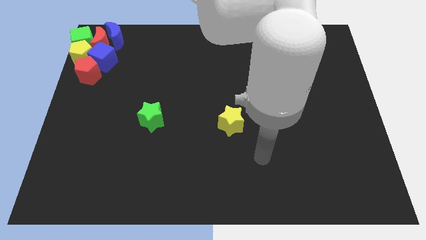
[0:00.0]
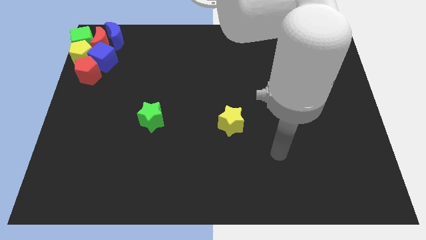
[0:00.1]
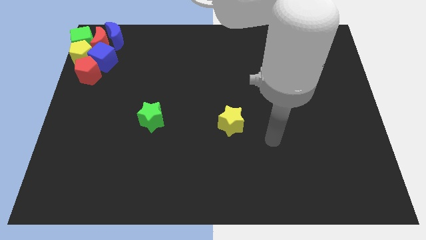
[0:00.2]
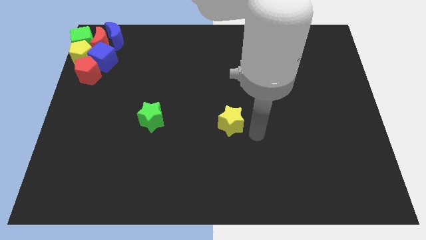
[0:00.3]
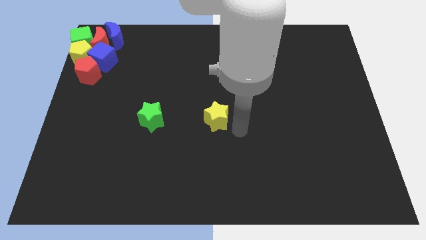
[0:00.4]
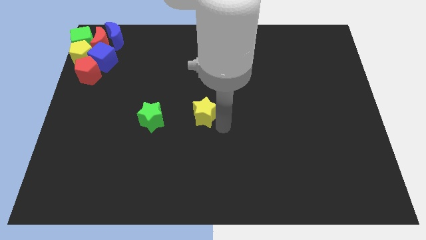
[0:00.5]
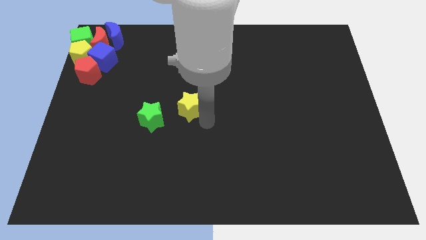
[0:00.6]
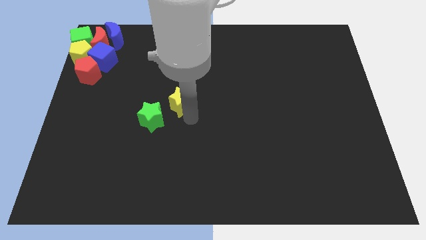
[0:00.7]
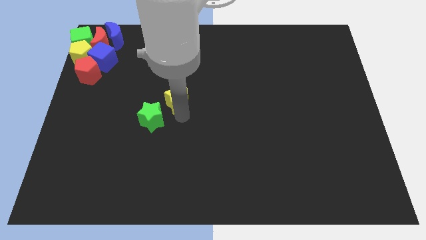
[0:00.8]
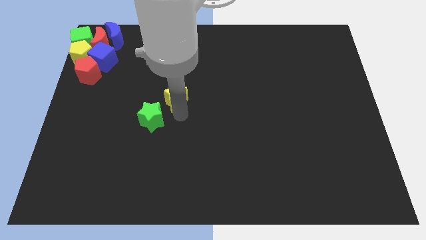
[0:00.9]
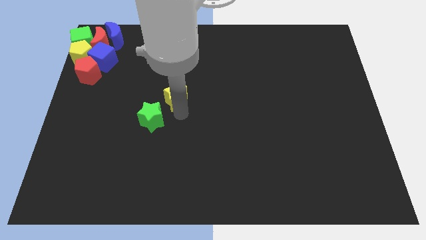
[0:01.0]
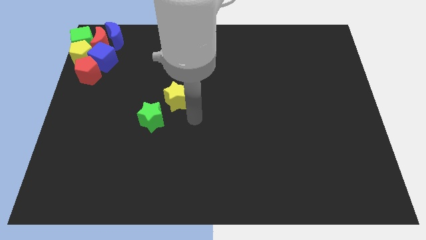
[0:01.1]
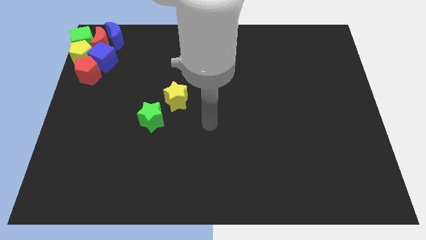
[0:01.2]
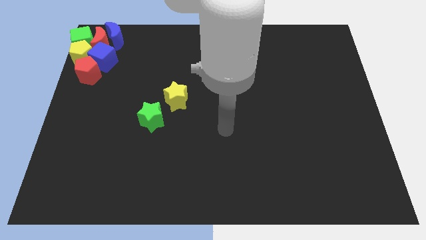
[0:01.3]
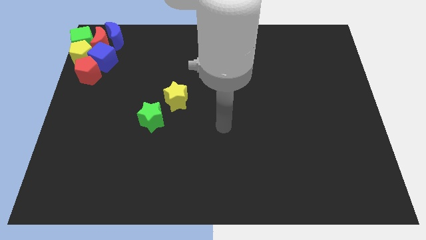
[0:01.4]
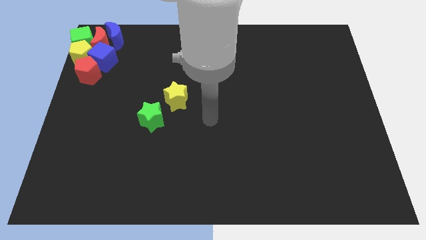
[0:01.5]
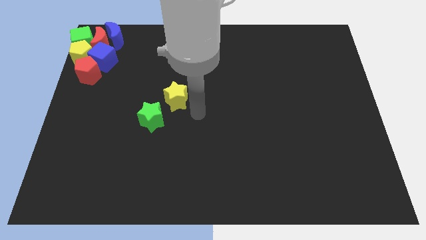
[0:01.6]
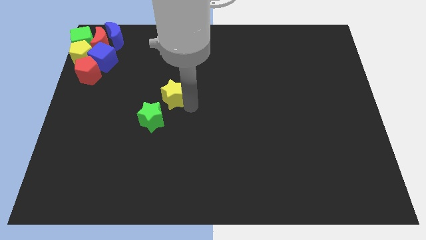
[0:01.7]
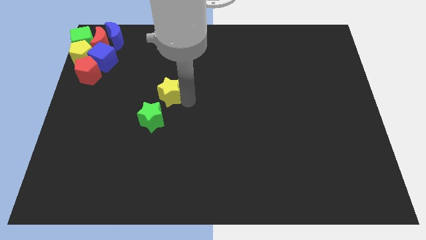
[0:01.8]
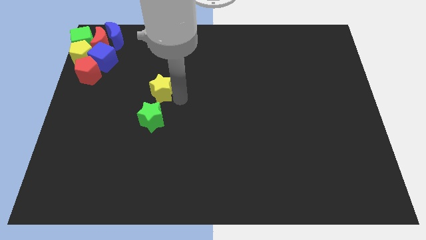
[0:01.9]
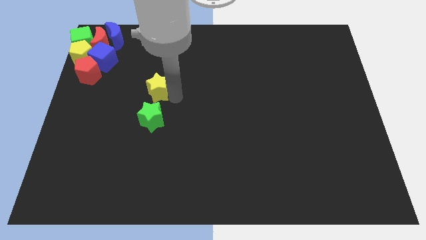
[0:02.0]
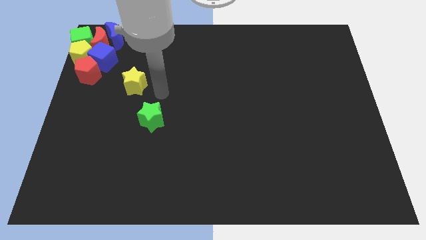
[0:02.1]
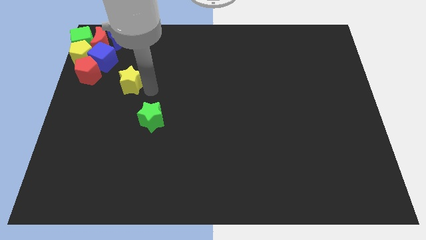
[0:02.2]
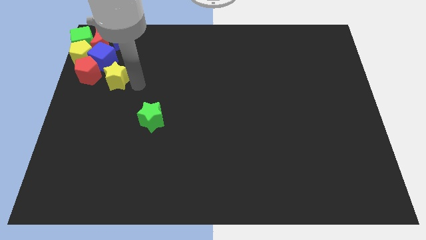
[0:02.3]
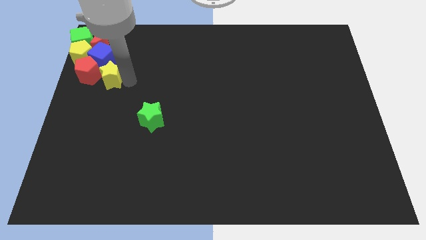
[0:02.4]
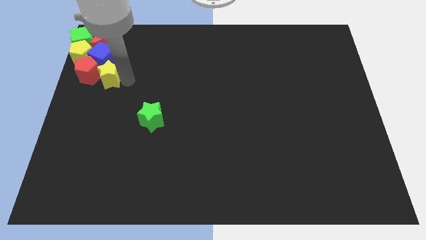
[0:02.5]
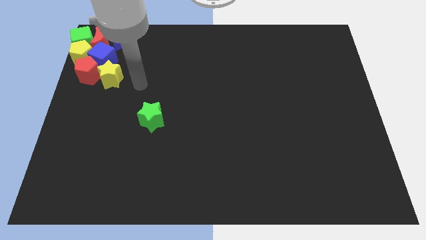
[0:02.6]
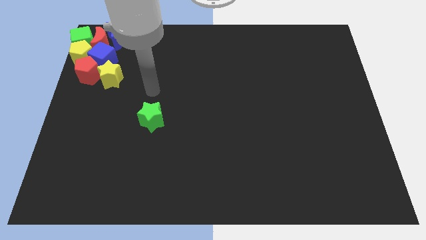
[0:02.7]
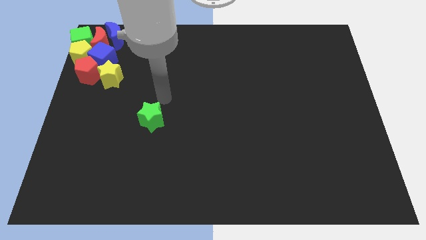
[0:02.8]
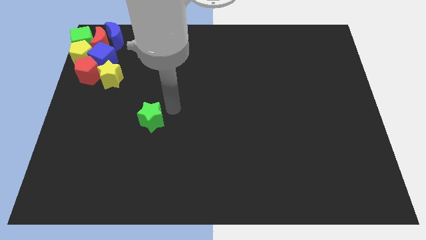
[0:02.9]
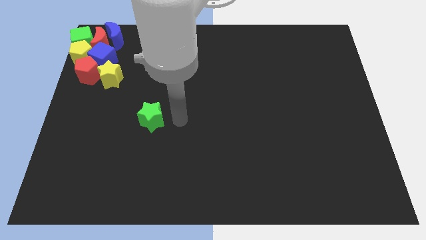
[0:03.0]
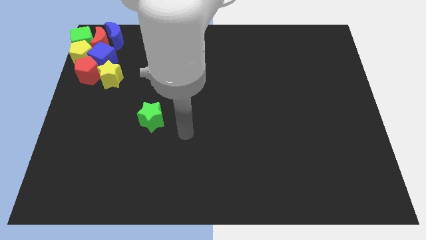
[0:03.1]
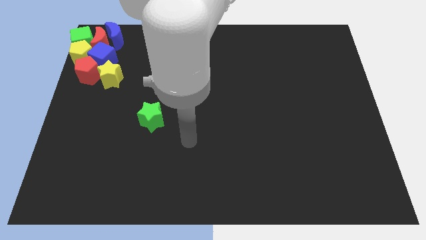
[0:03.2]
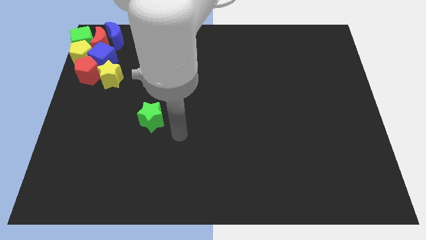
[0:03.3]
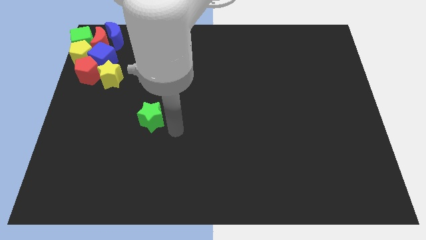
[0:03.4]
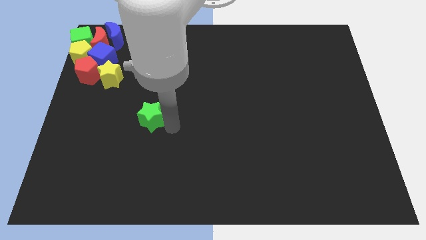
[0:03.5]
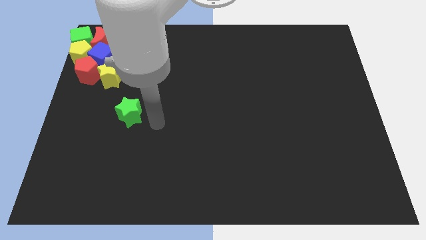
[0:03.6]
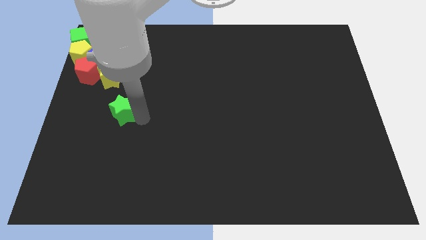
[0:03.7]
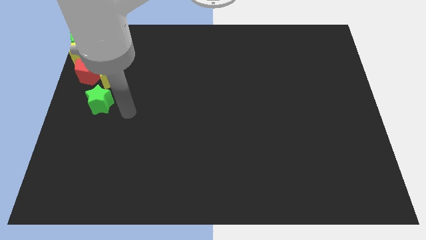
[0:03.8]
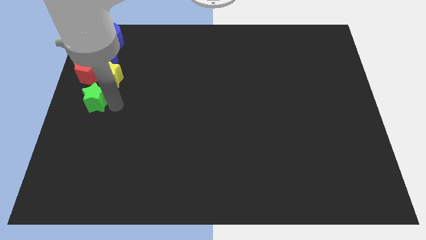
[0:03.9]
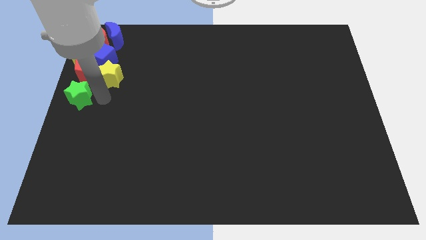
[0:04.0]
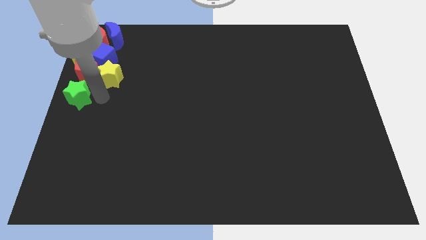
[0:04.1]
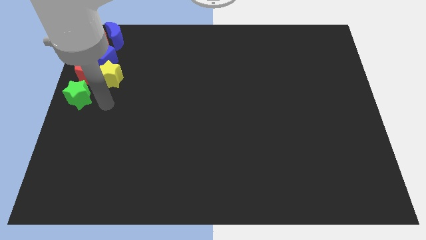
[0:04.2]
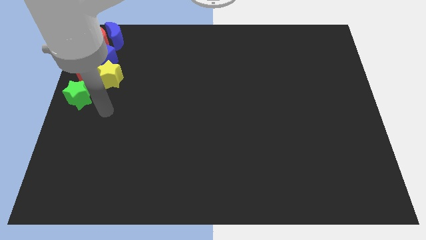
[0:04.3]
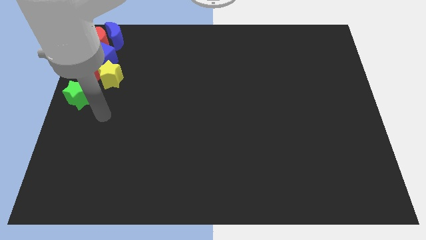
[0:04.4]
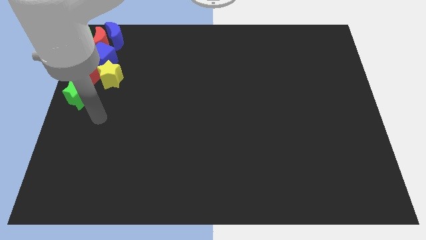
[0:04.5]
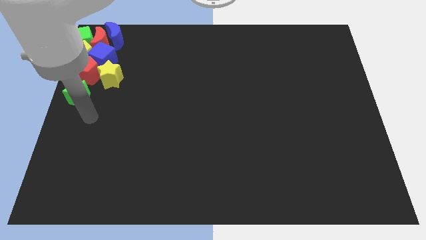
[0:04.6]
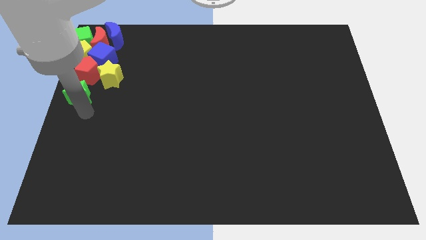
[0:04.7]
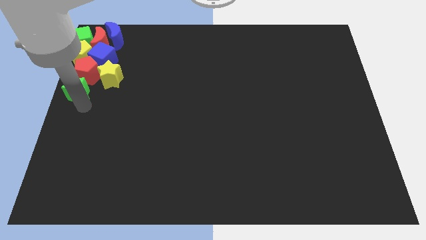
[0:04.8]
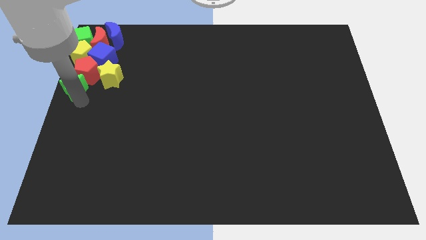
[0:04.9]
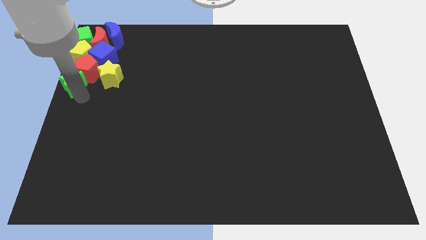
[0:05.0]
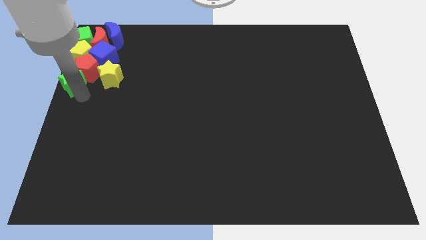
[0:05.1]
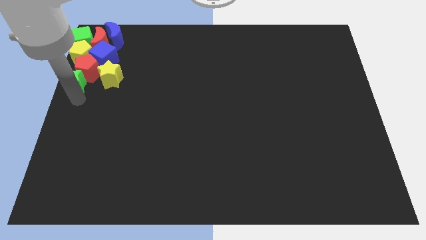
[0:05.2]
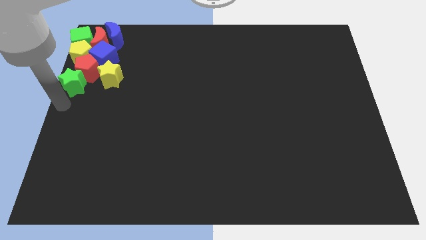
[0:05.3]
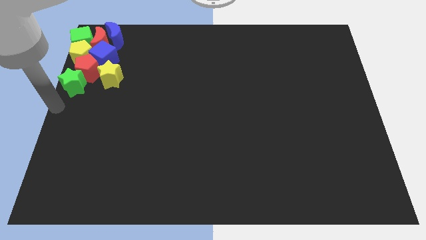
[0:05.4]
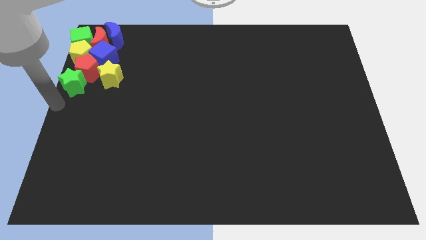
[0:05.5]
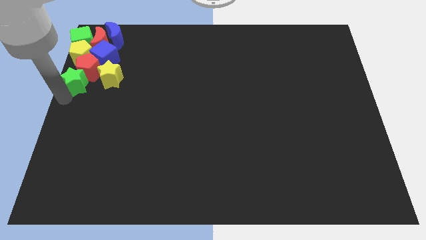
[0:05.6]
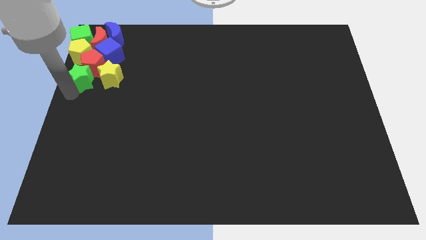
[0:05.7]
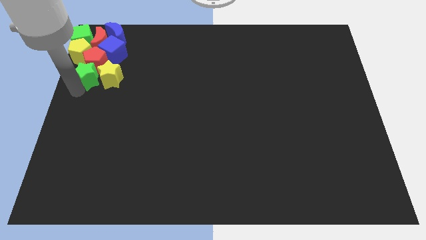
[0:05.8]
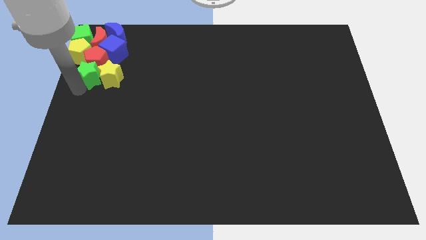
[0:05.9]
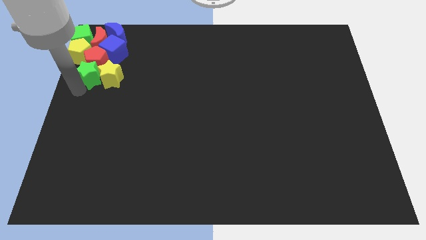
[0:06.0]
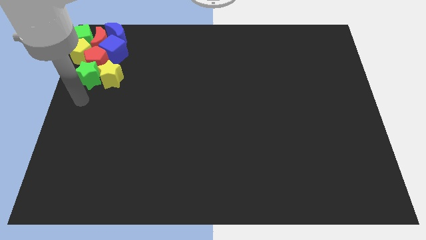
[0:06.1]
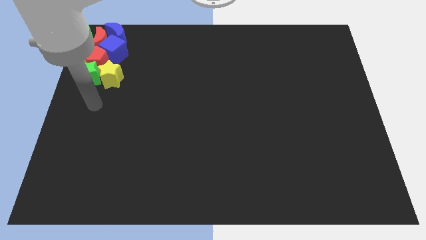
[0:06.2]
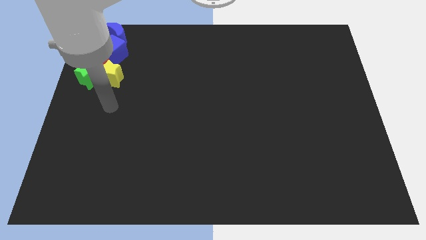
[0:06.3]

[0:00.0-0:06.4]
push the green star and the yellow star into the group of blocks

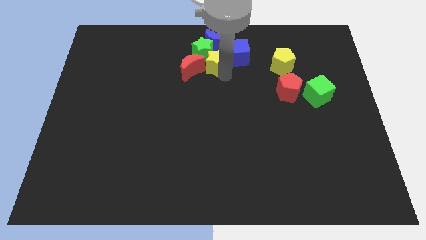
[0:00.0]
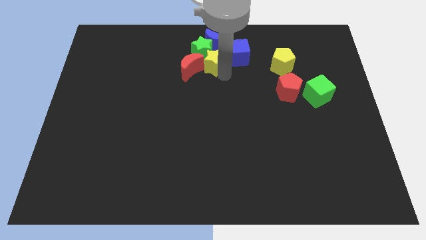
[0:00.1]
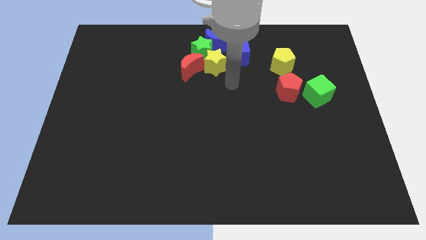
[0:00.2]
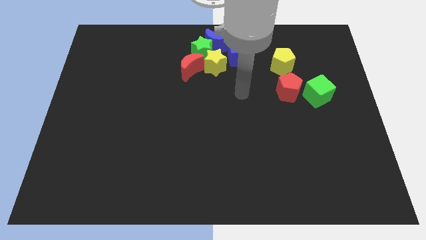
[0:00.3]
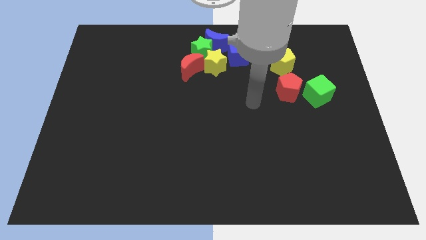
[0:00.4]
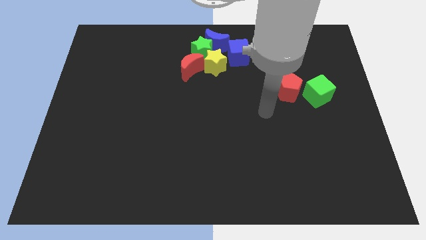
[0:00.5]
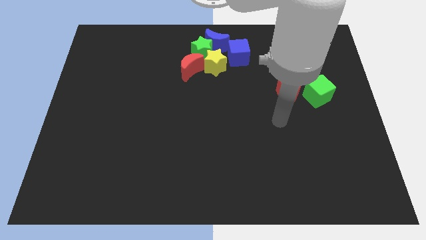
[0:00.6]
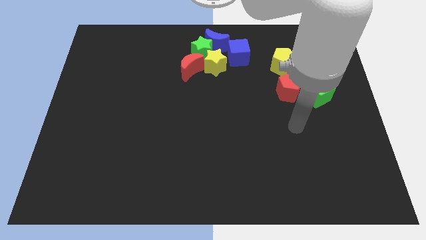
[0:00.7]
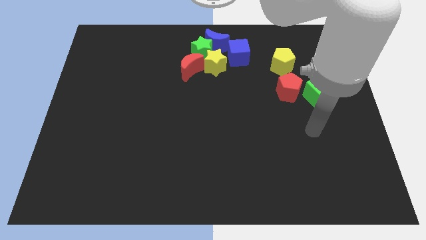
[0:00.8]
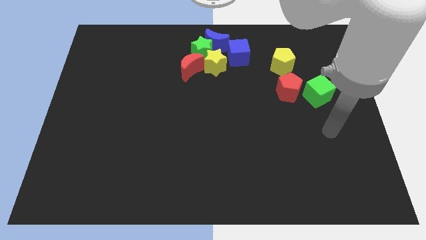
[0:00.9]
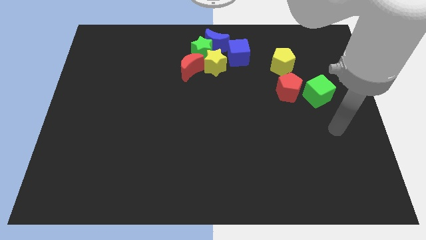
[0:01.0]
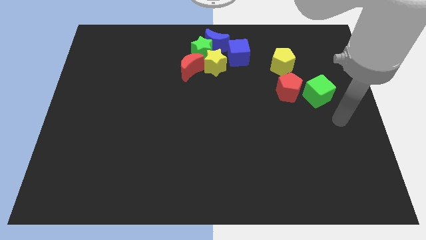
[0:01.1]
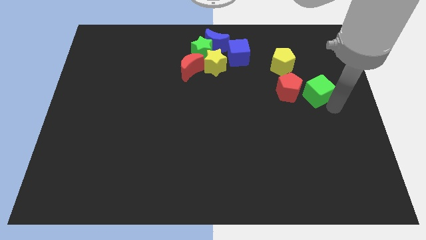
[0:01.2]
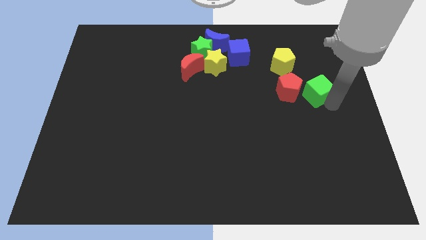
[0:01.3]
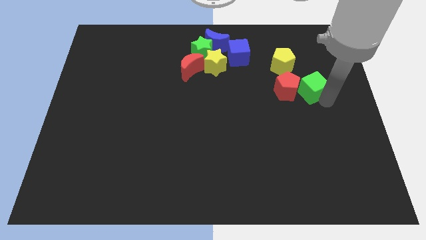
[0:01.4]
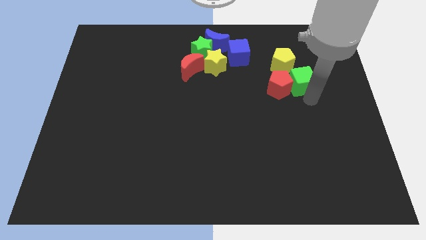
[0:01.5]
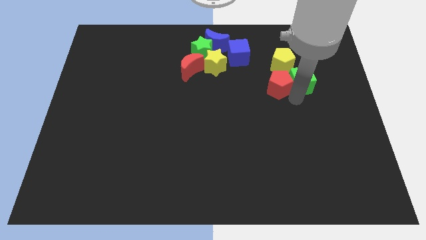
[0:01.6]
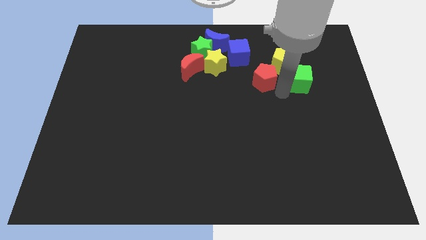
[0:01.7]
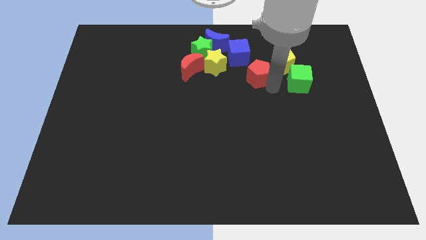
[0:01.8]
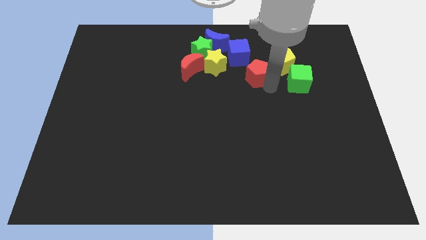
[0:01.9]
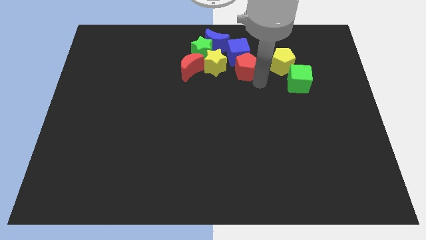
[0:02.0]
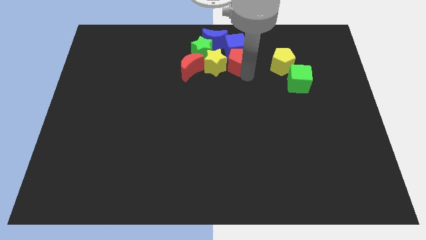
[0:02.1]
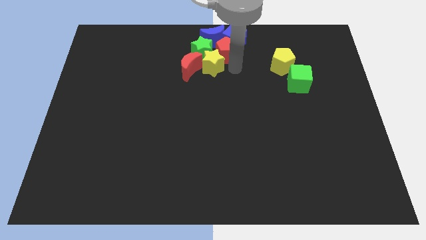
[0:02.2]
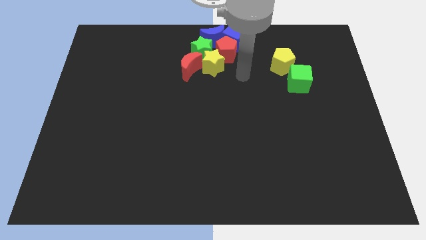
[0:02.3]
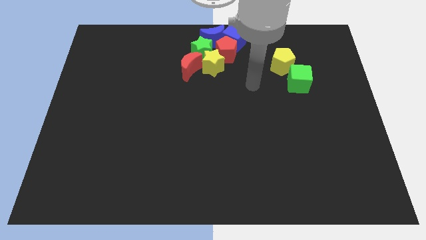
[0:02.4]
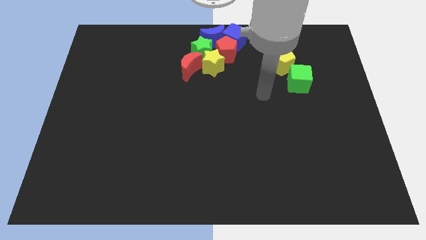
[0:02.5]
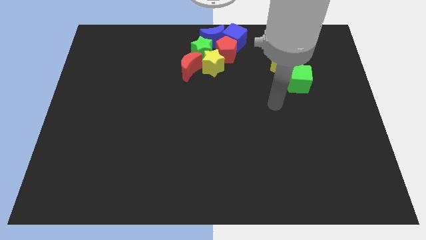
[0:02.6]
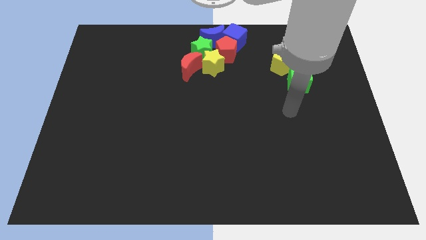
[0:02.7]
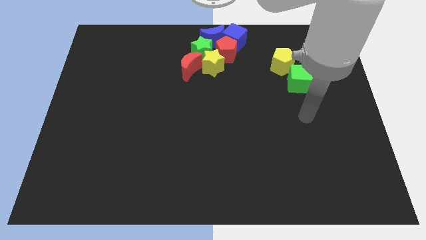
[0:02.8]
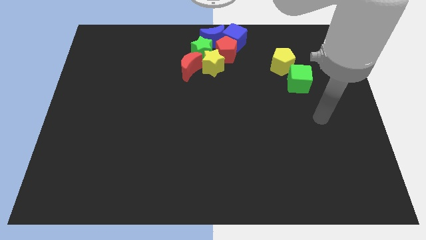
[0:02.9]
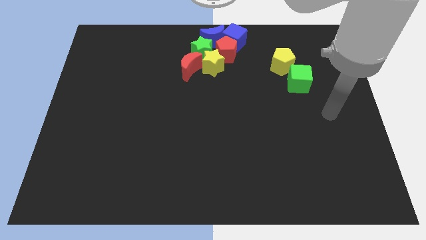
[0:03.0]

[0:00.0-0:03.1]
drag the red pentagon into the group of blocks
